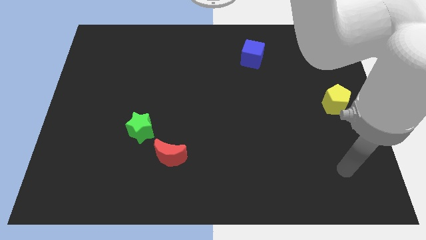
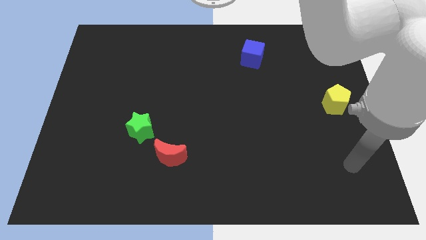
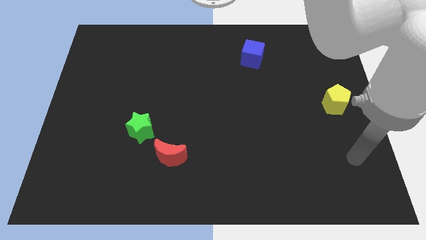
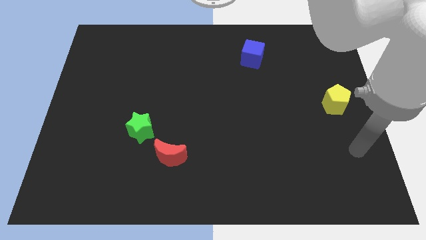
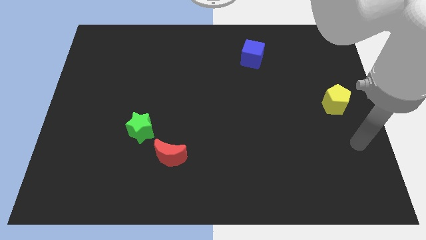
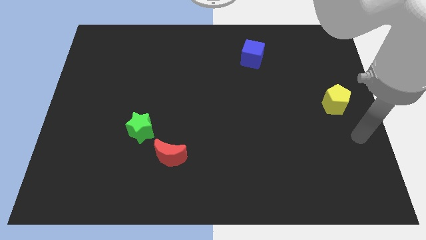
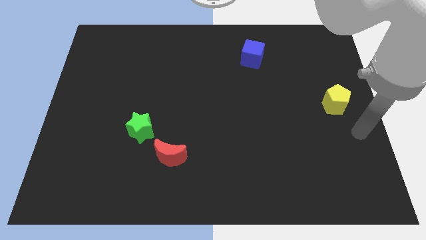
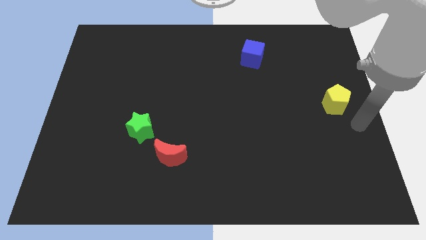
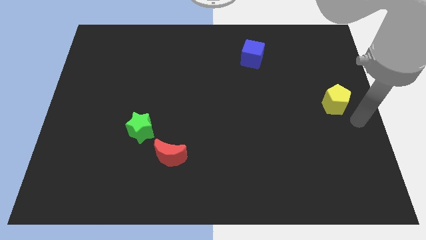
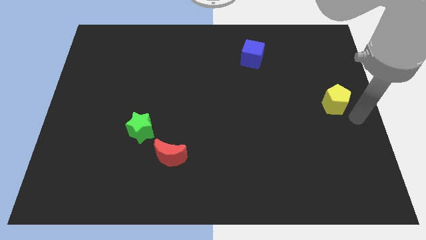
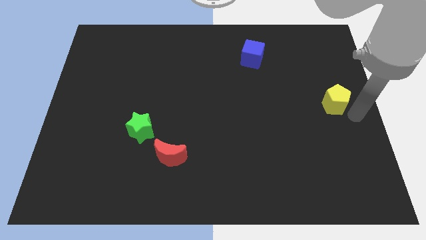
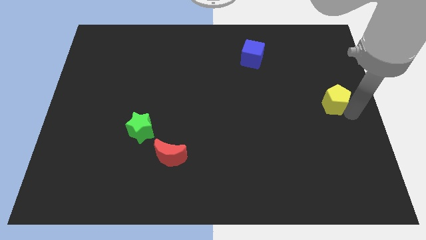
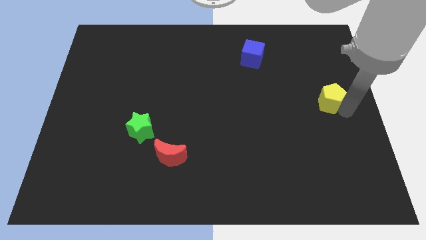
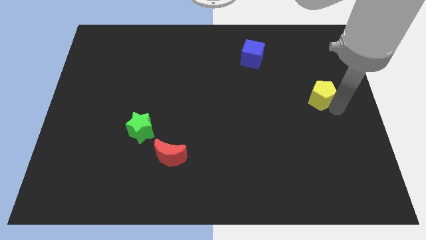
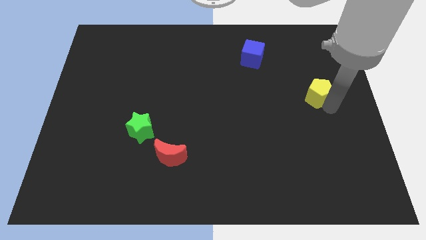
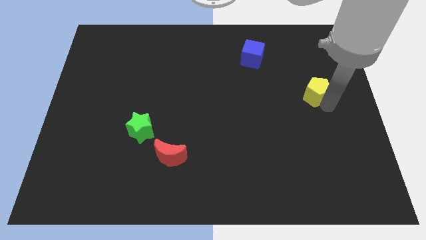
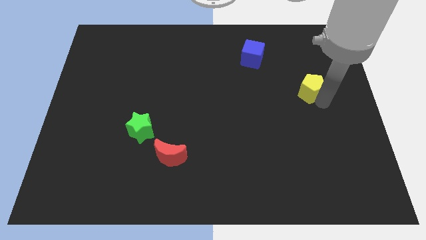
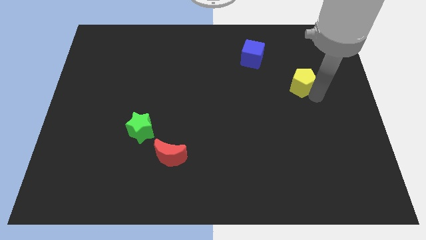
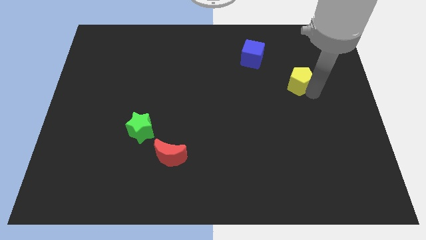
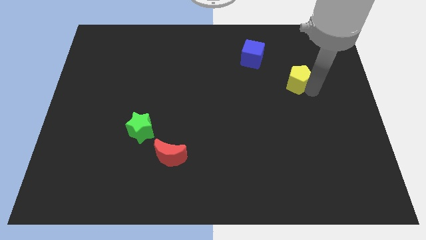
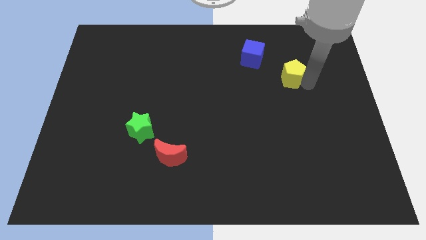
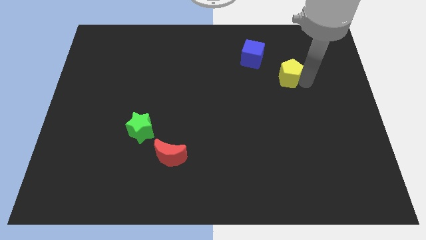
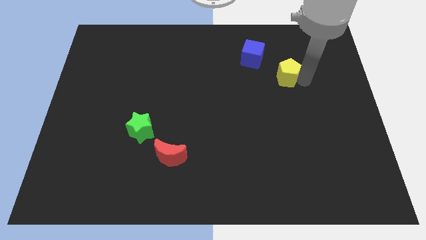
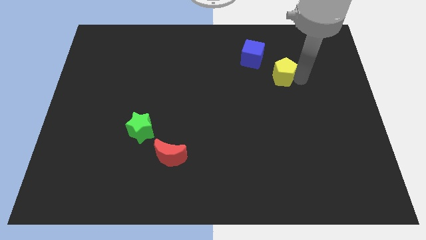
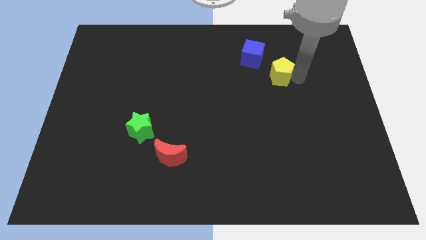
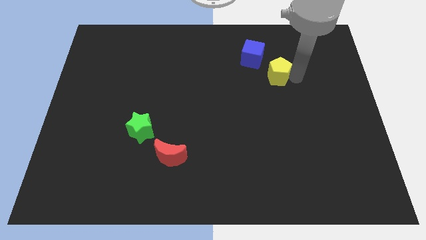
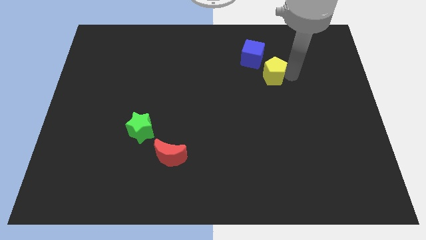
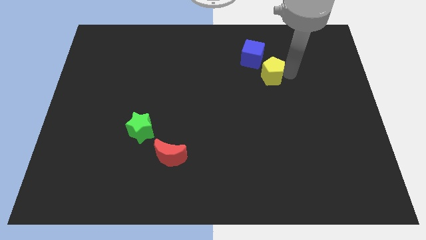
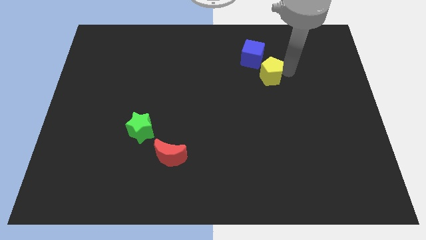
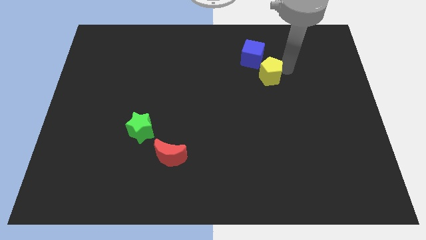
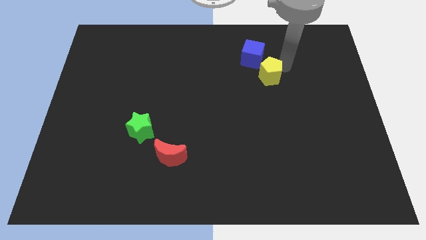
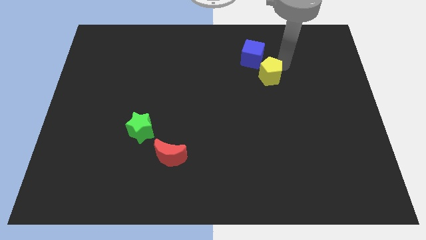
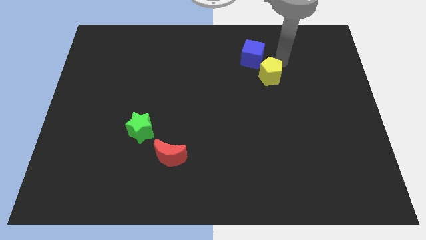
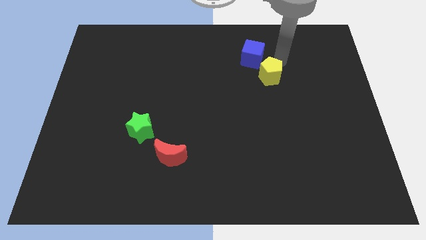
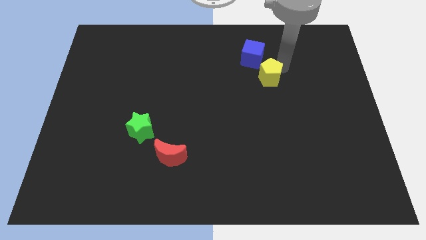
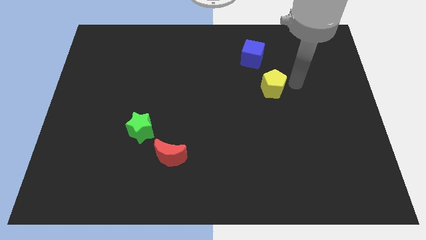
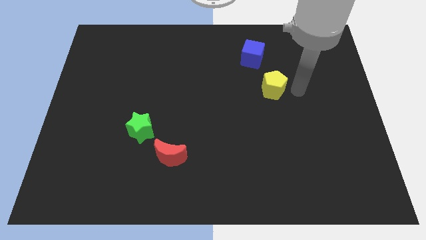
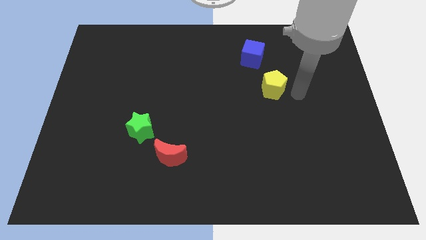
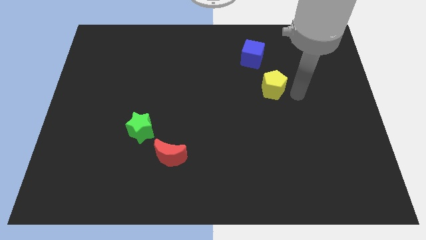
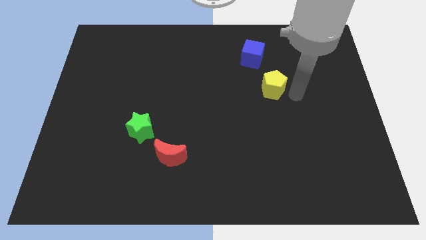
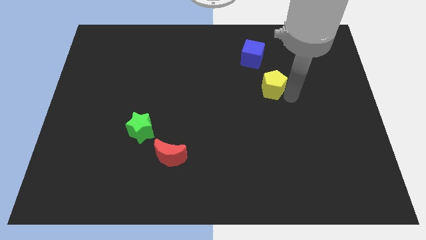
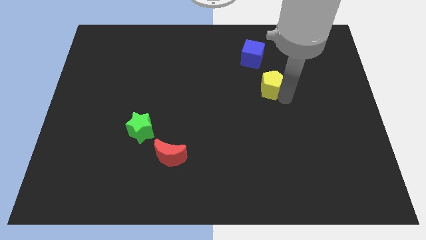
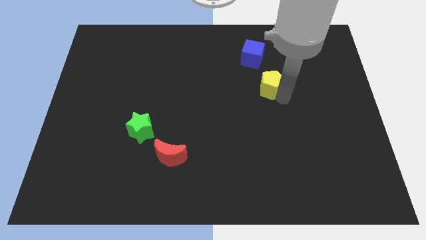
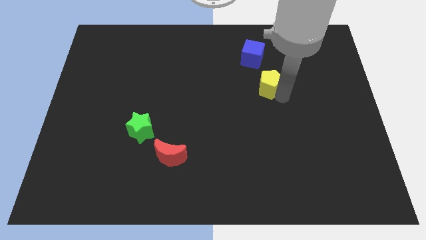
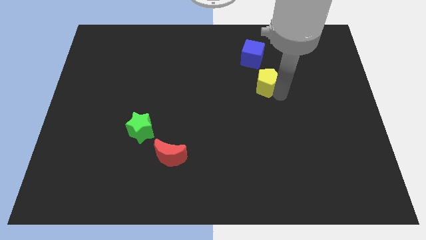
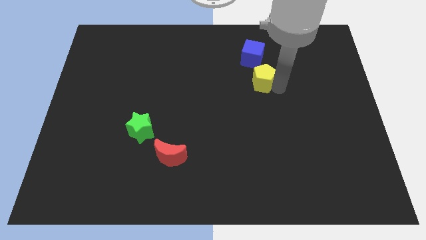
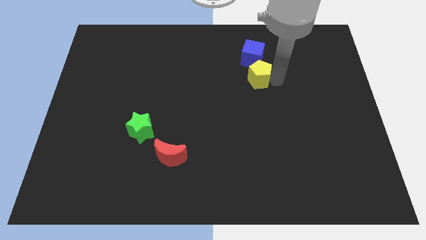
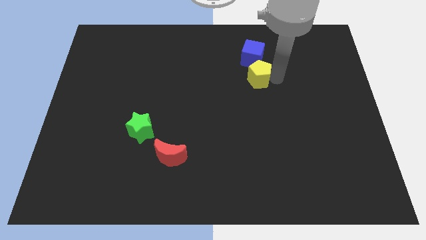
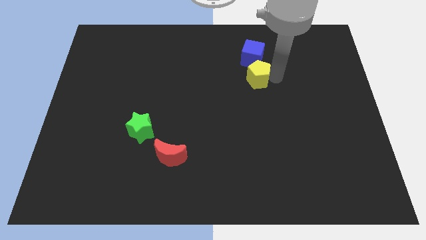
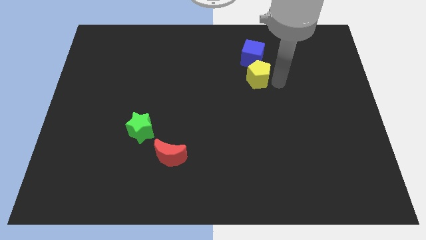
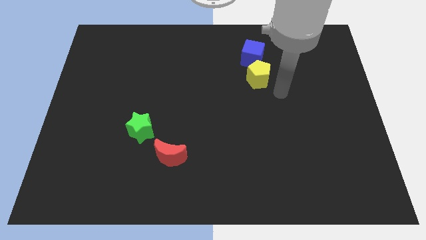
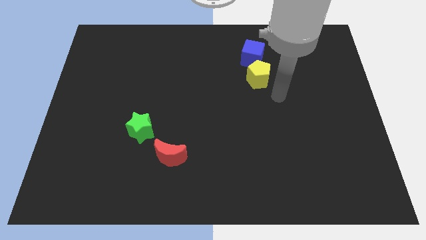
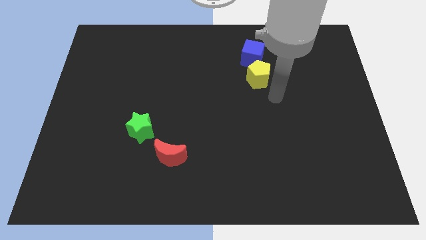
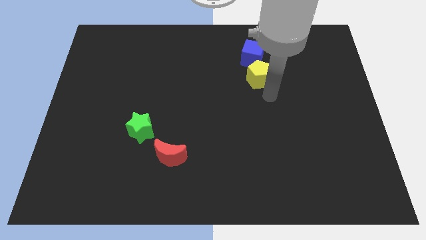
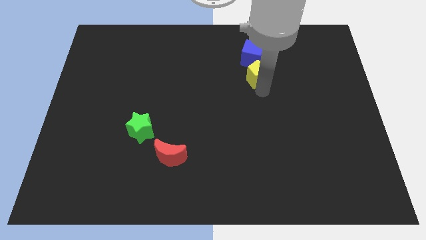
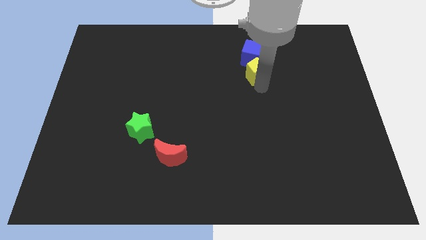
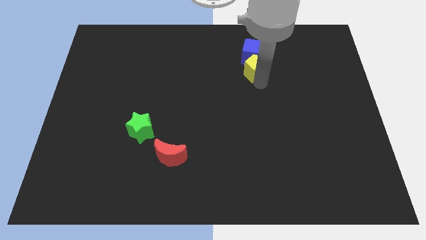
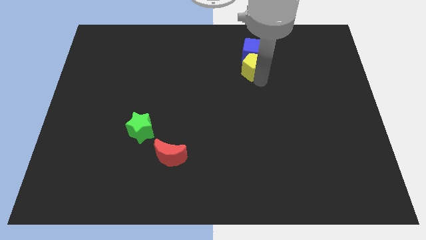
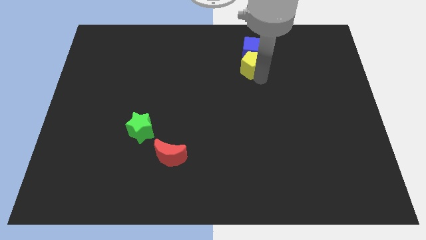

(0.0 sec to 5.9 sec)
slide the pentagon close to the blue block

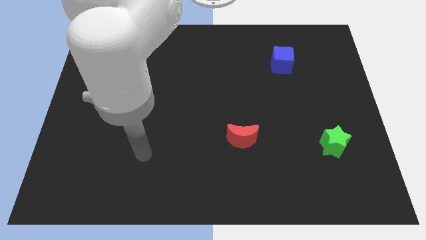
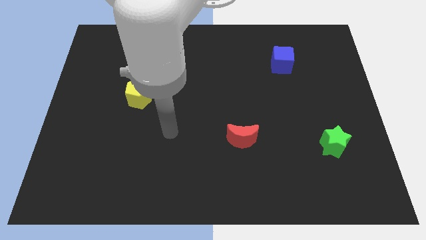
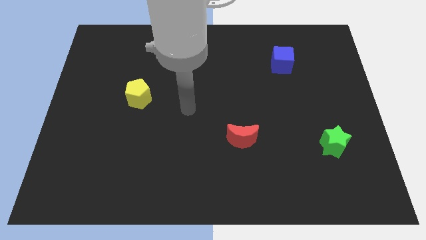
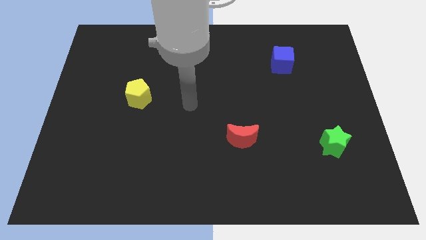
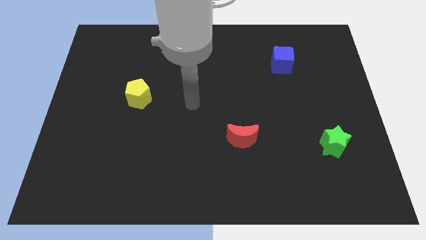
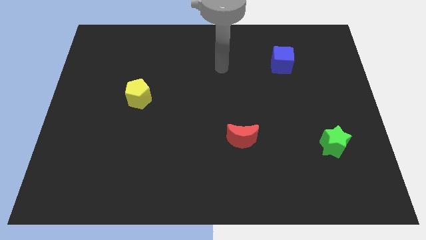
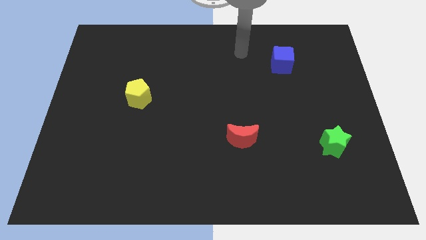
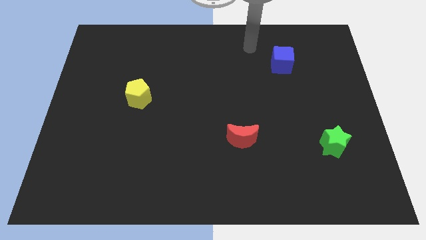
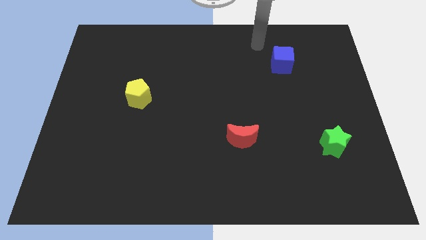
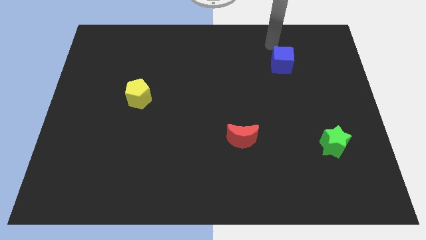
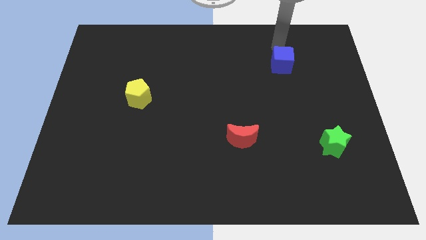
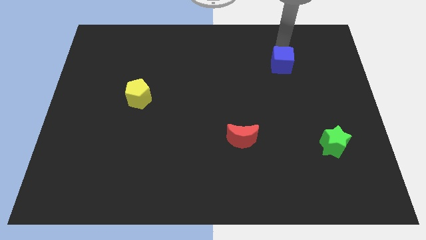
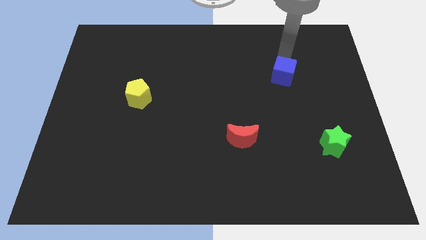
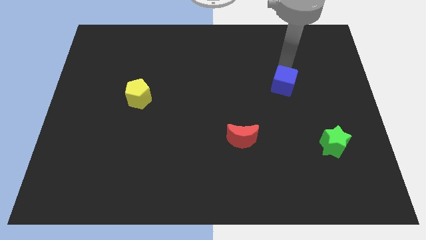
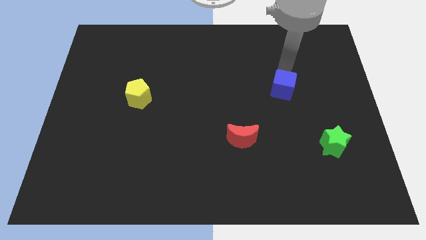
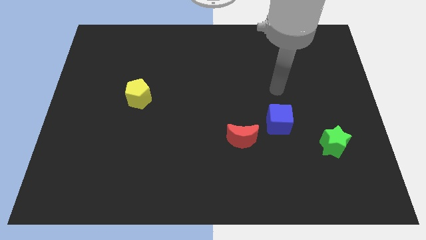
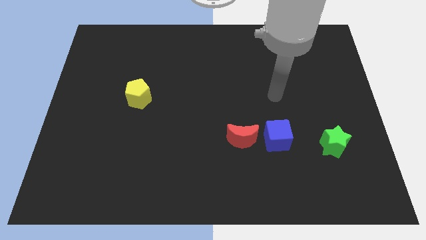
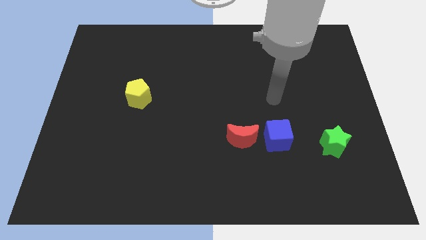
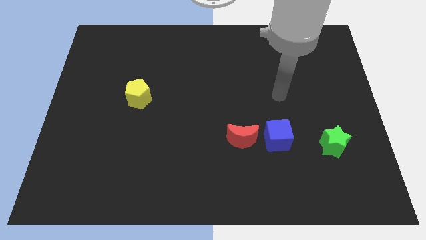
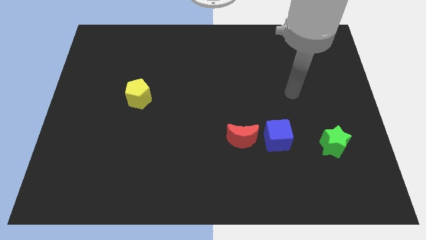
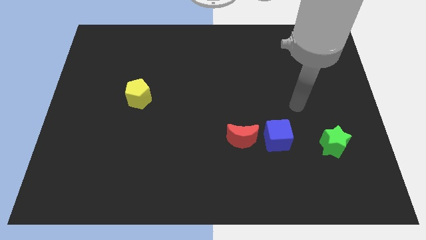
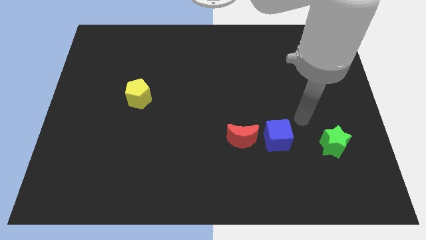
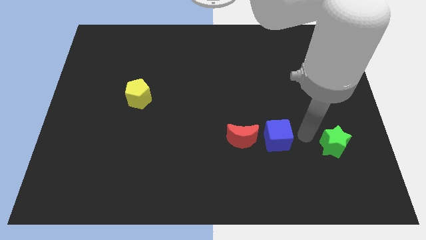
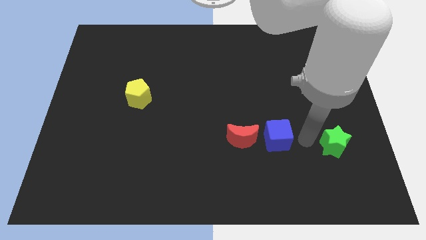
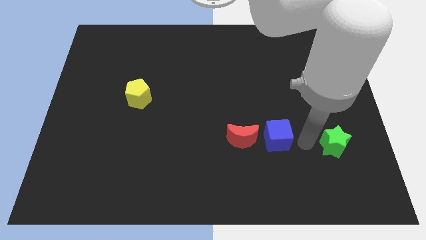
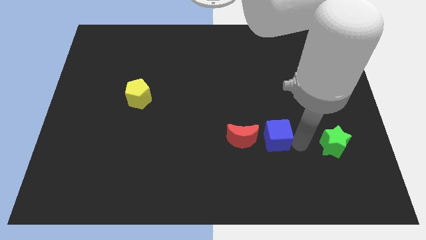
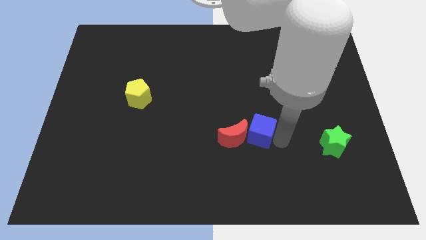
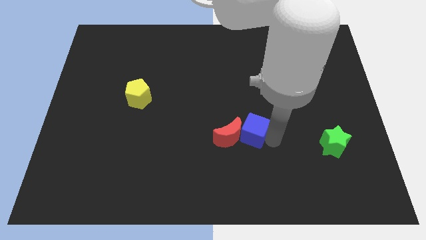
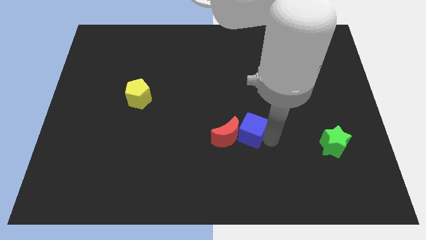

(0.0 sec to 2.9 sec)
put the blue cube to the red moon
